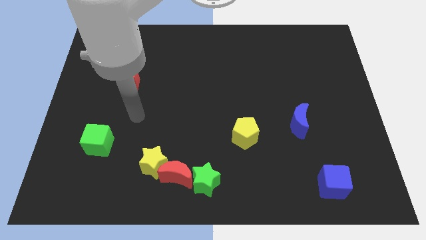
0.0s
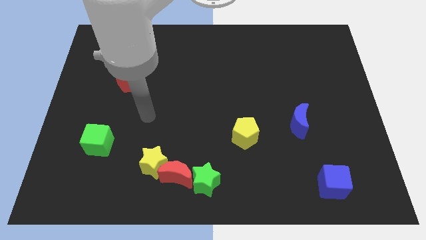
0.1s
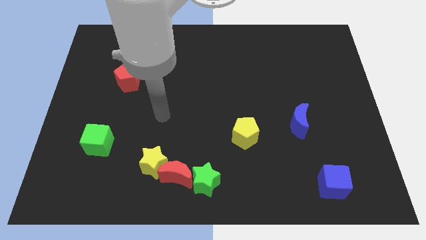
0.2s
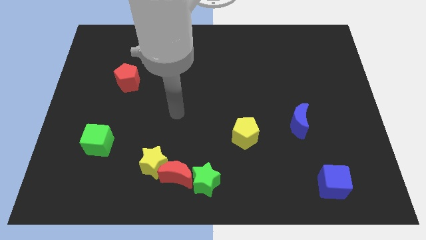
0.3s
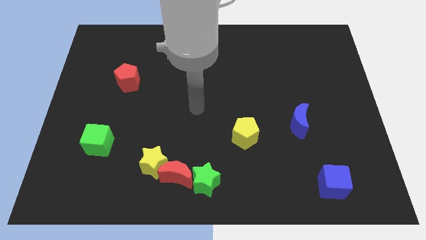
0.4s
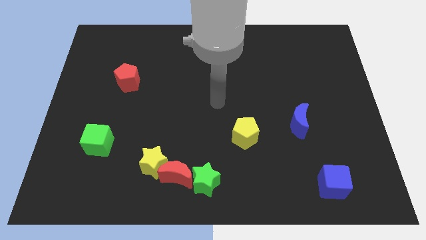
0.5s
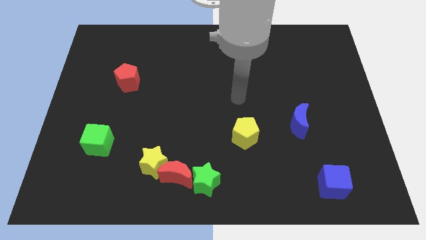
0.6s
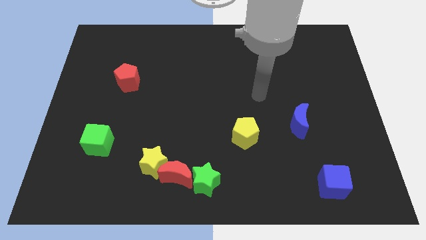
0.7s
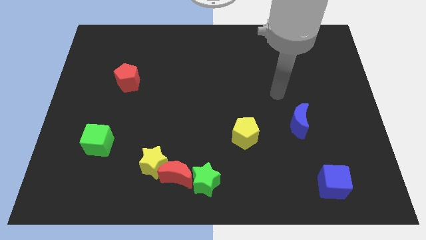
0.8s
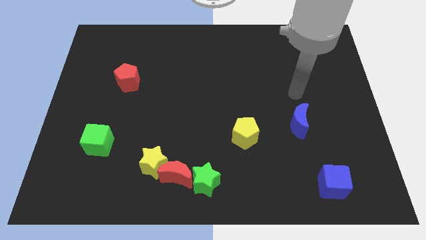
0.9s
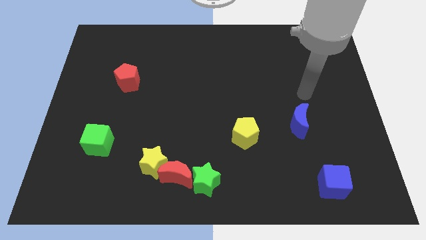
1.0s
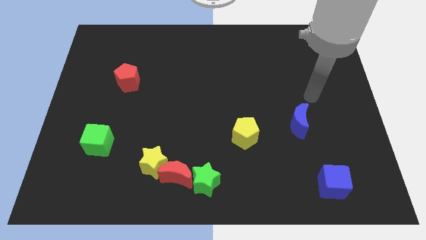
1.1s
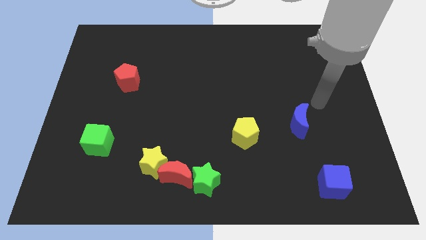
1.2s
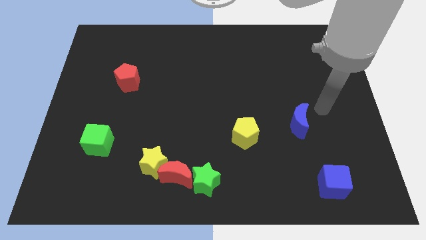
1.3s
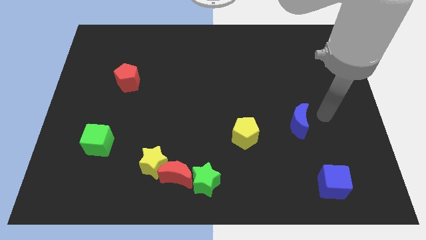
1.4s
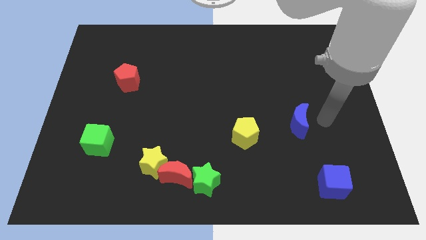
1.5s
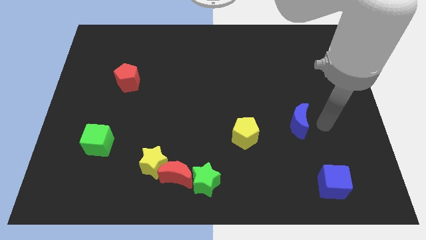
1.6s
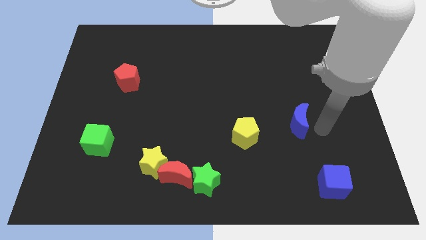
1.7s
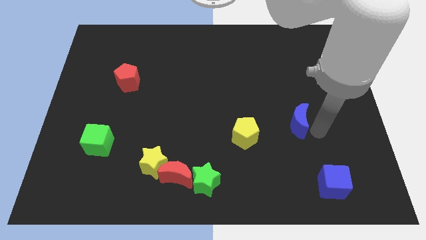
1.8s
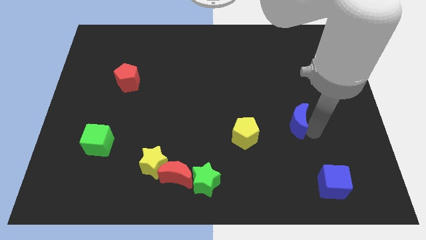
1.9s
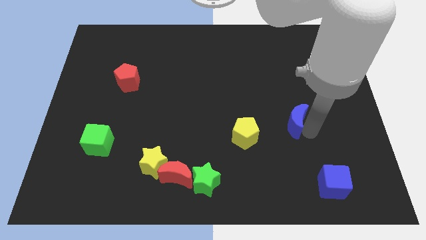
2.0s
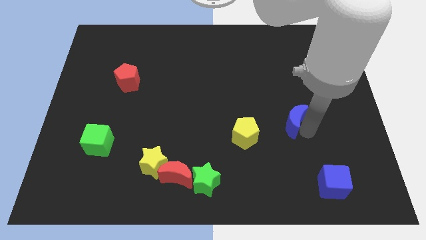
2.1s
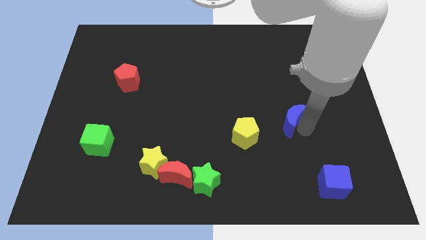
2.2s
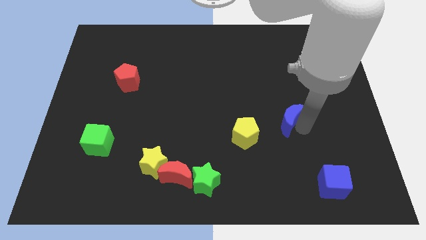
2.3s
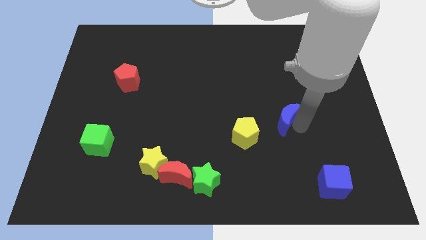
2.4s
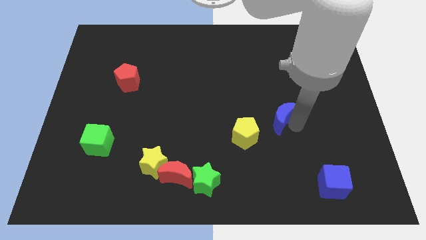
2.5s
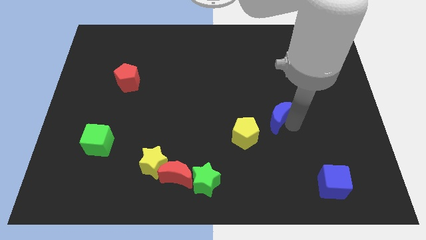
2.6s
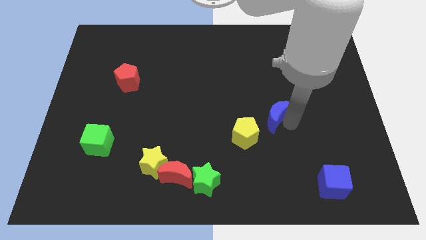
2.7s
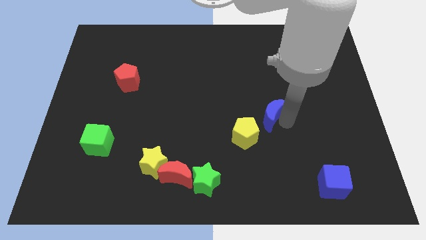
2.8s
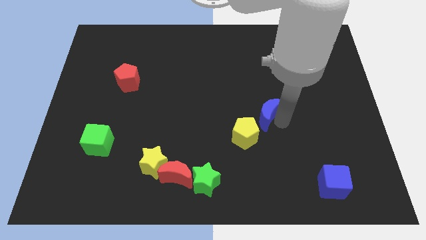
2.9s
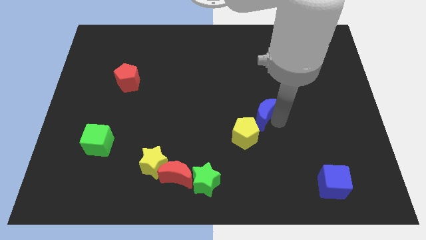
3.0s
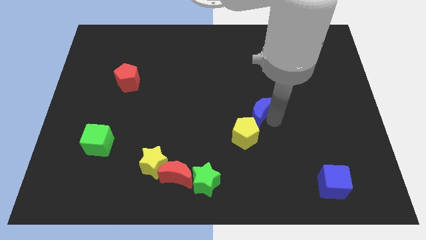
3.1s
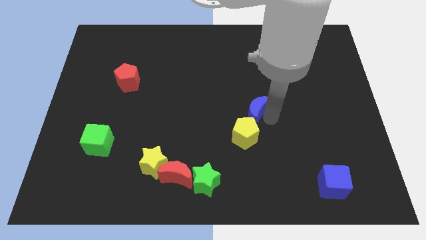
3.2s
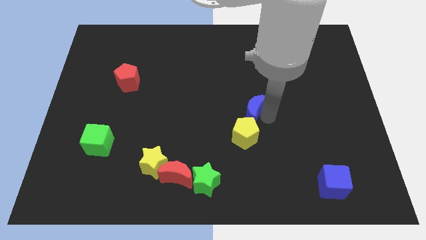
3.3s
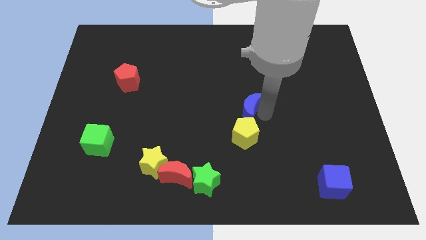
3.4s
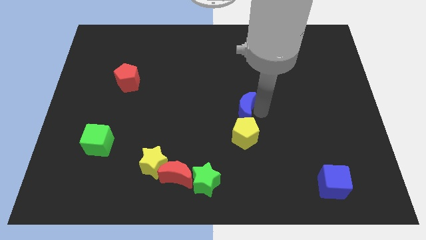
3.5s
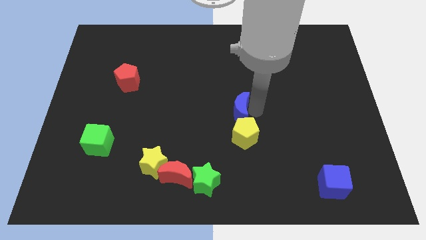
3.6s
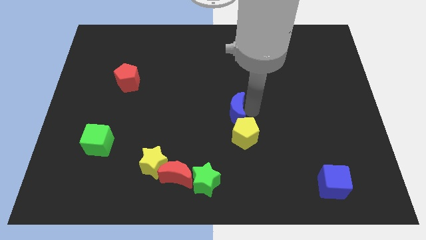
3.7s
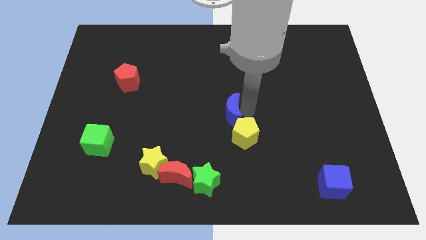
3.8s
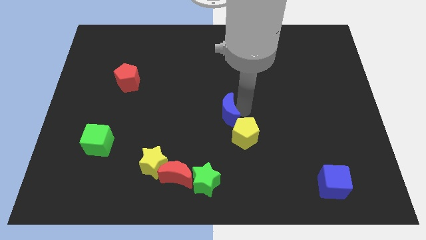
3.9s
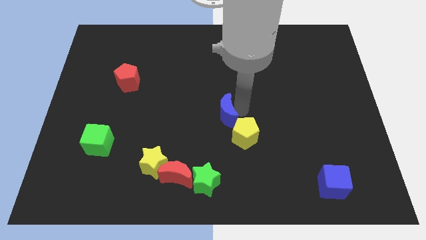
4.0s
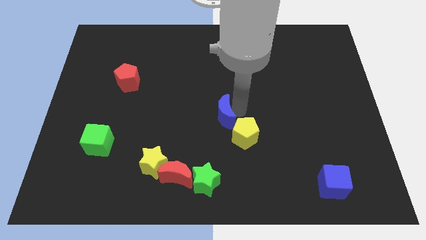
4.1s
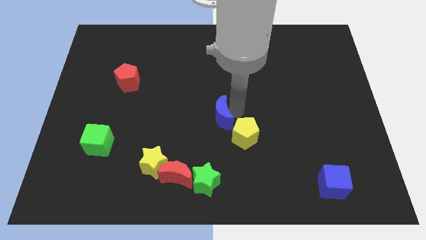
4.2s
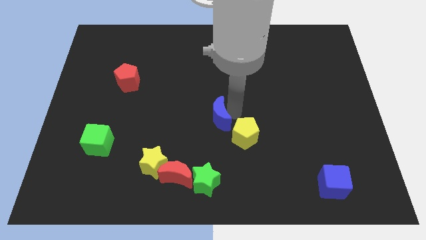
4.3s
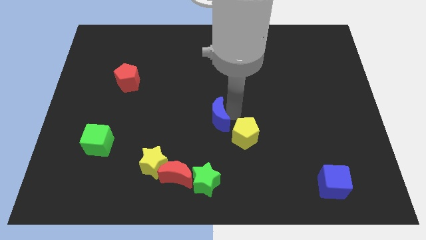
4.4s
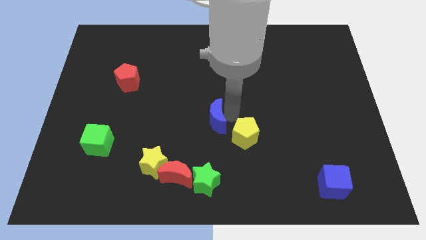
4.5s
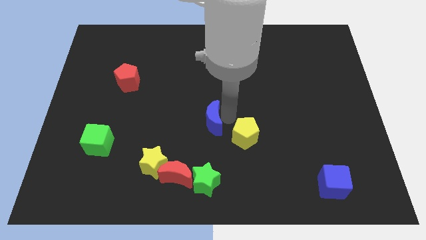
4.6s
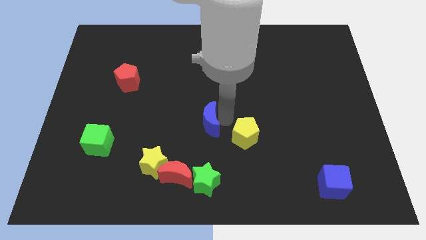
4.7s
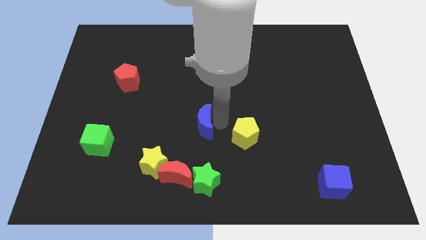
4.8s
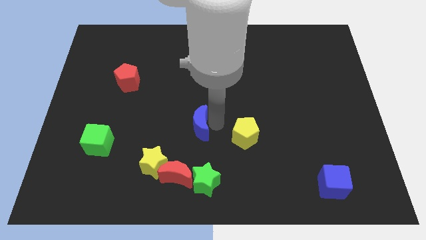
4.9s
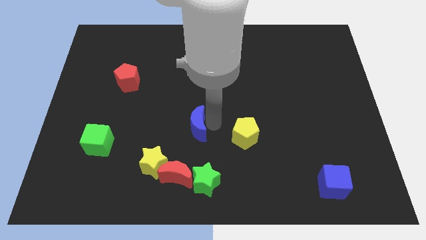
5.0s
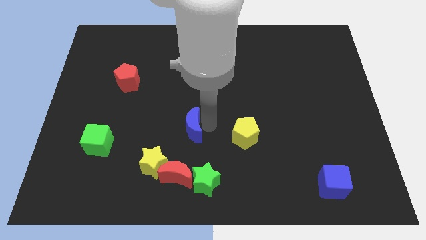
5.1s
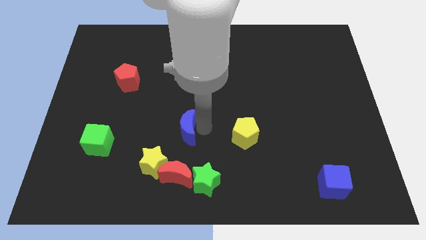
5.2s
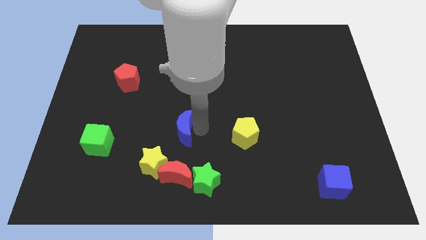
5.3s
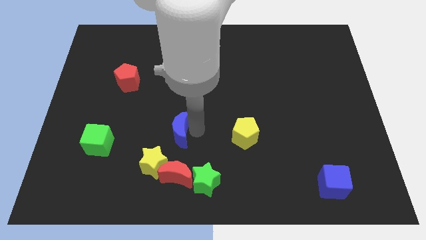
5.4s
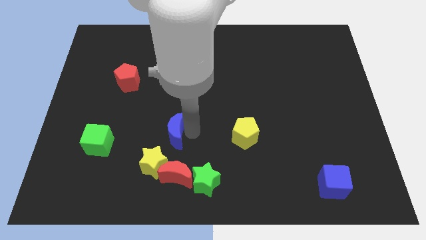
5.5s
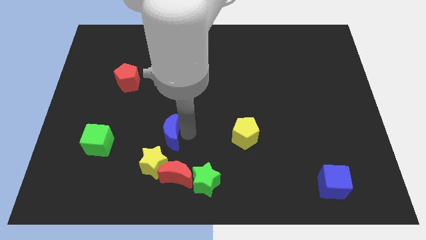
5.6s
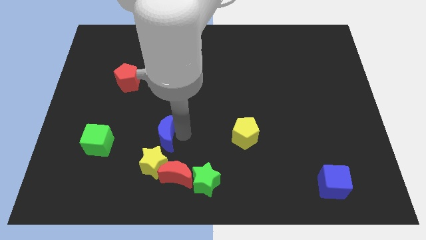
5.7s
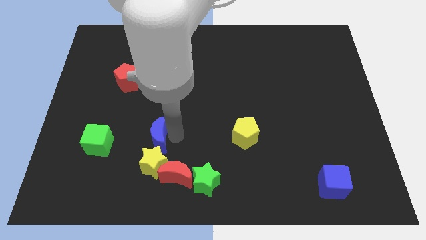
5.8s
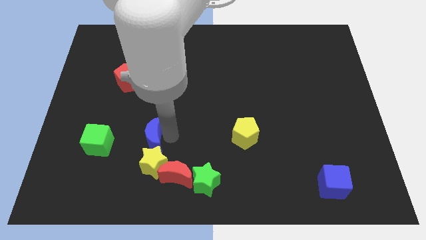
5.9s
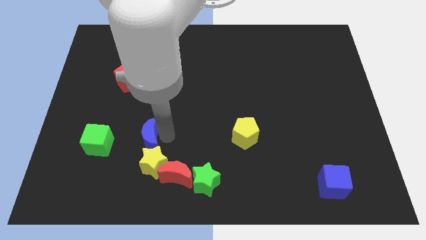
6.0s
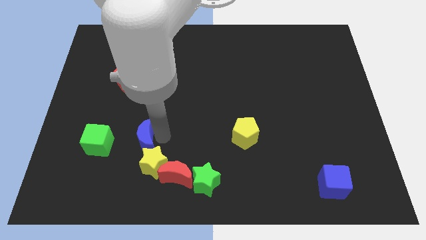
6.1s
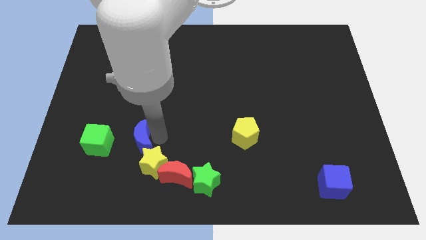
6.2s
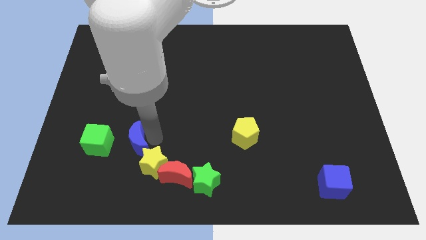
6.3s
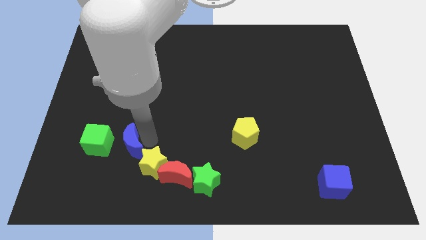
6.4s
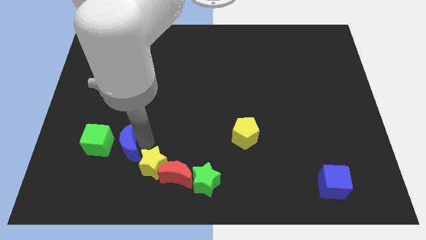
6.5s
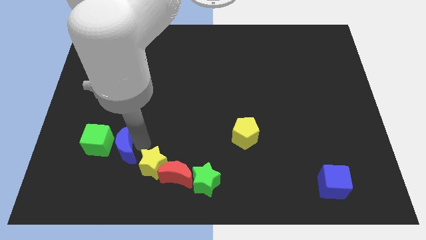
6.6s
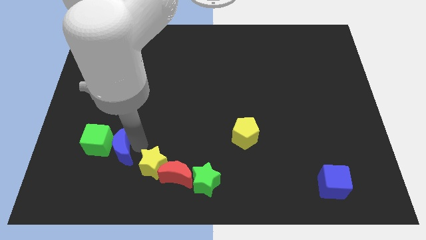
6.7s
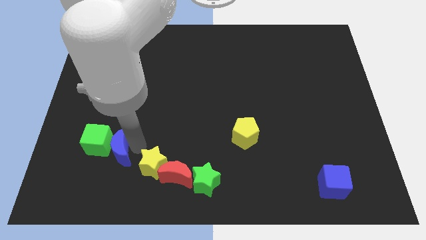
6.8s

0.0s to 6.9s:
slide the blue moon to the green cube

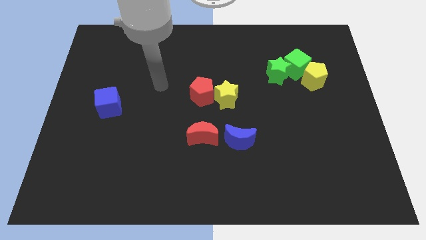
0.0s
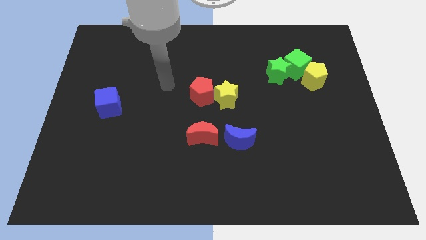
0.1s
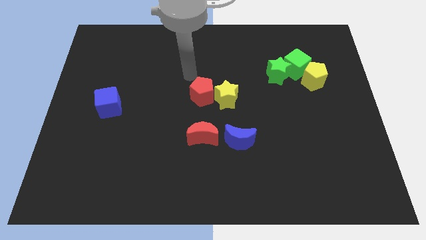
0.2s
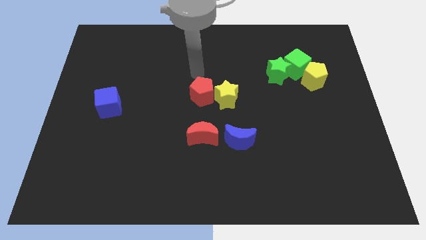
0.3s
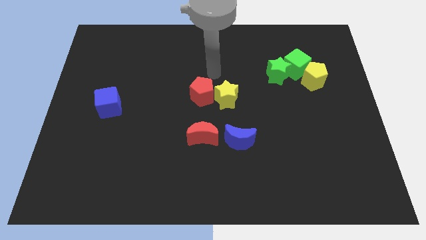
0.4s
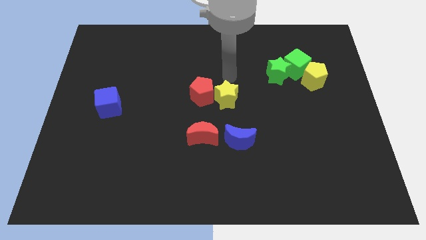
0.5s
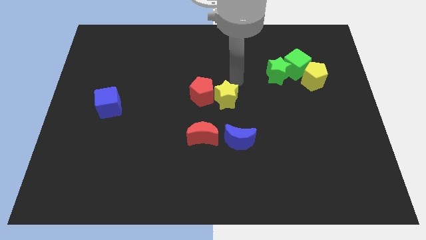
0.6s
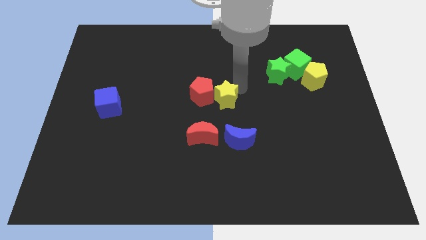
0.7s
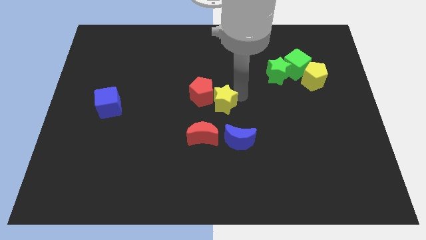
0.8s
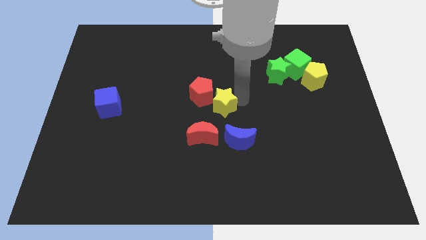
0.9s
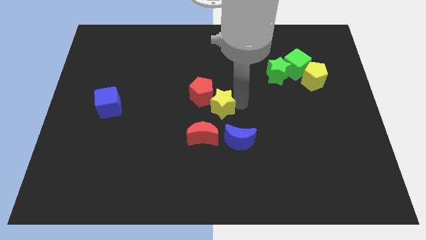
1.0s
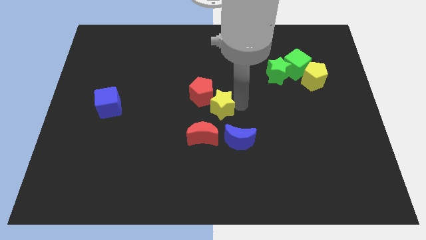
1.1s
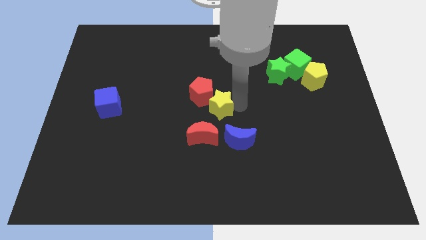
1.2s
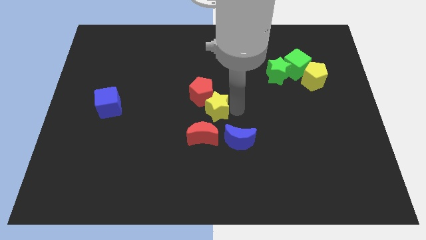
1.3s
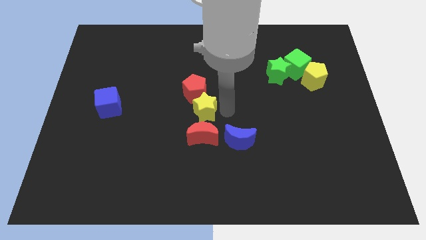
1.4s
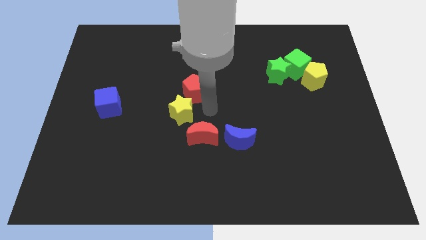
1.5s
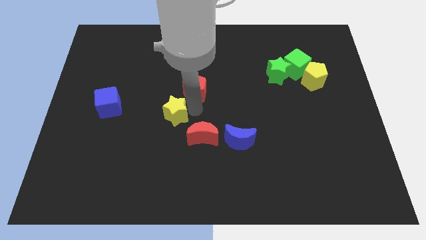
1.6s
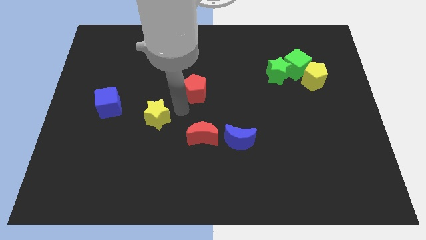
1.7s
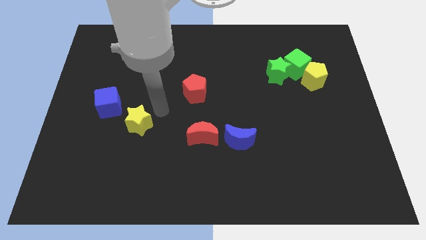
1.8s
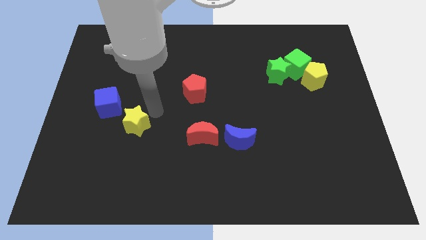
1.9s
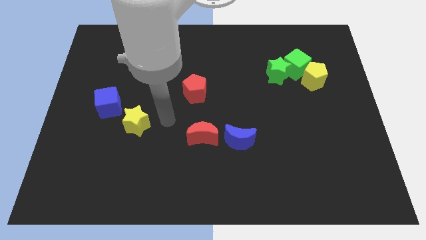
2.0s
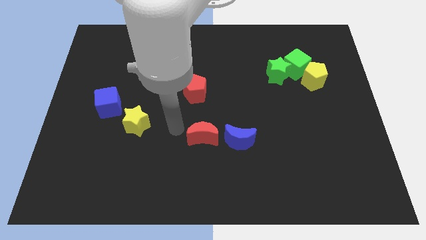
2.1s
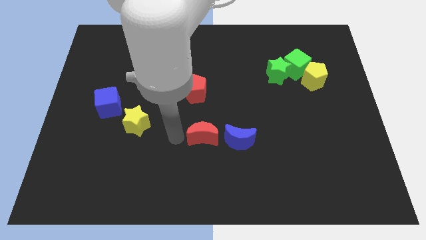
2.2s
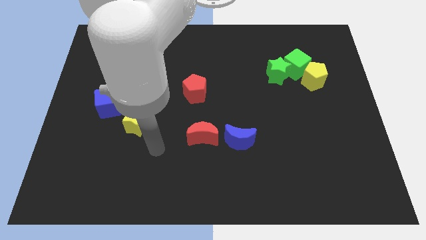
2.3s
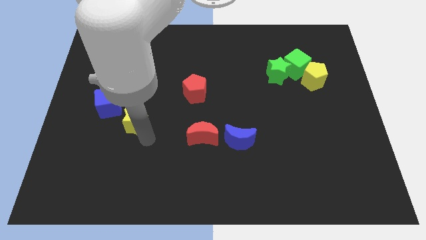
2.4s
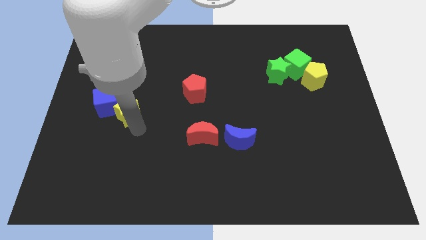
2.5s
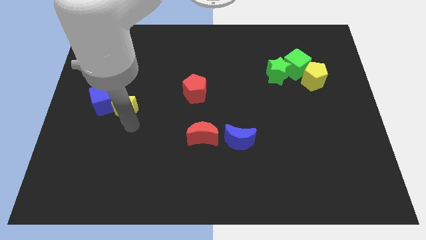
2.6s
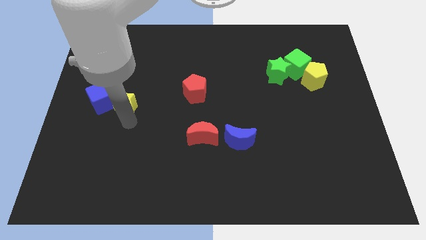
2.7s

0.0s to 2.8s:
move the yellow star to the blue cube
